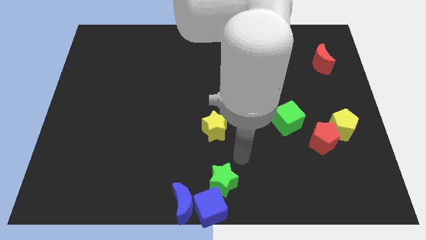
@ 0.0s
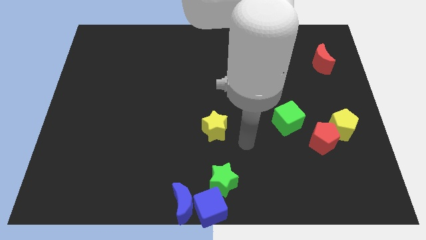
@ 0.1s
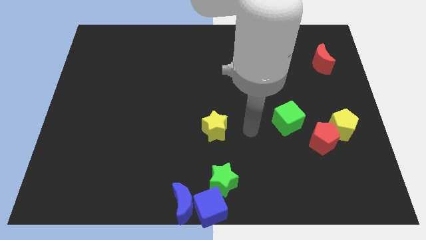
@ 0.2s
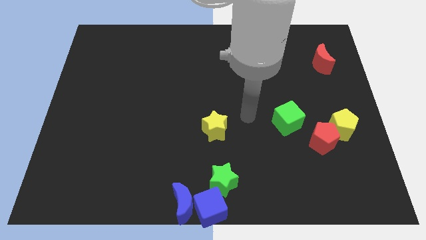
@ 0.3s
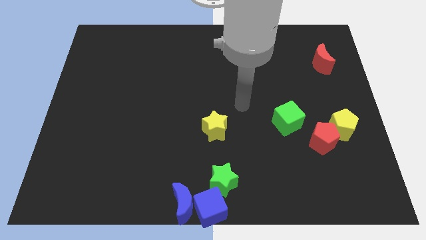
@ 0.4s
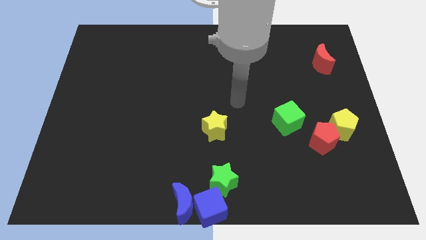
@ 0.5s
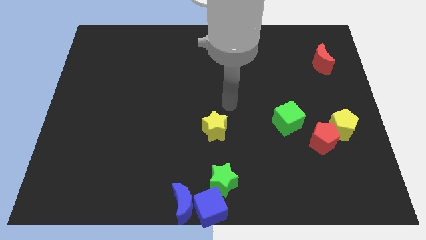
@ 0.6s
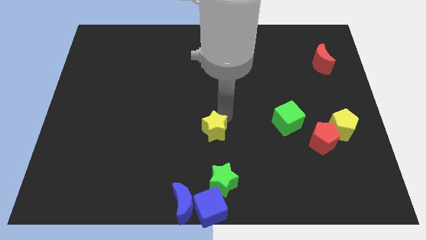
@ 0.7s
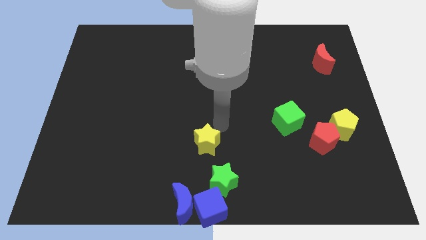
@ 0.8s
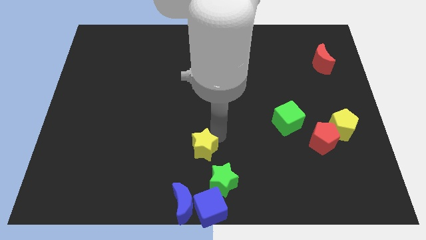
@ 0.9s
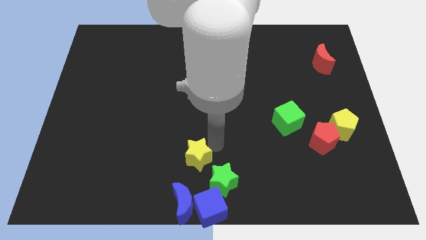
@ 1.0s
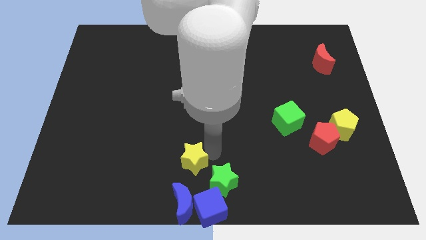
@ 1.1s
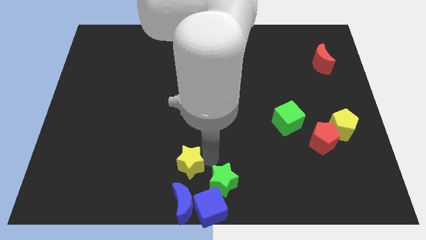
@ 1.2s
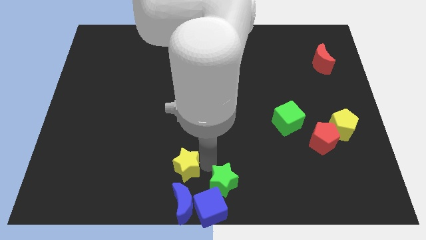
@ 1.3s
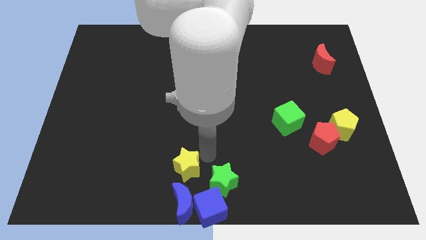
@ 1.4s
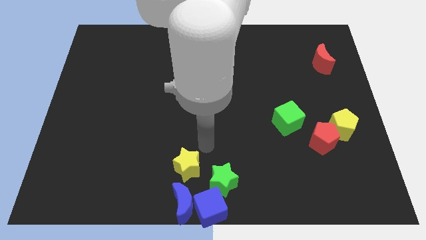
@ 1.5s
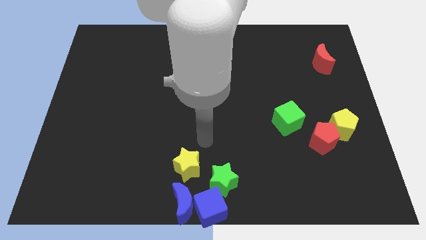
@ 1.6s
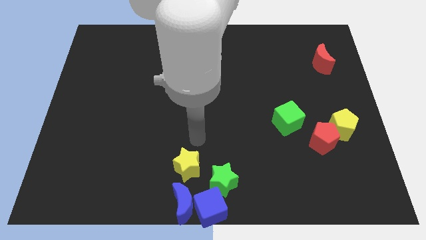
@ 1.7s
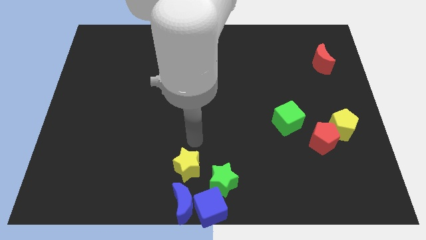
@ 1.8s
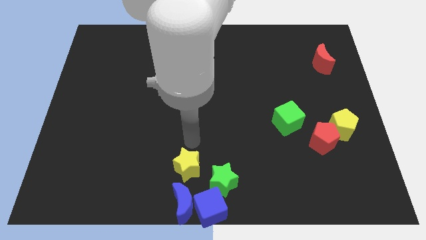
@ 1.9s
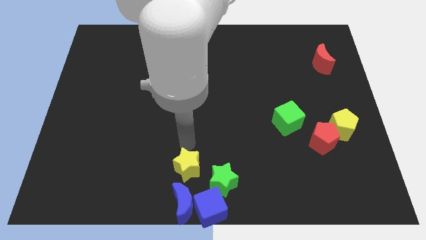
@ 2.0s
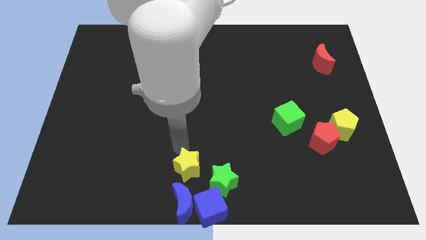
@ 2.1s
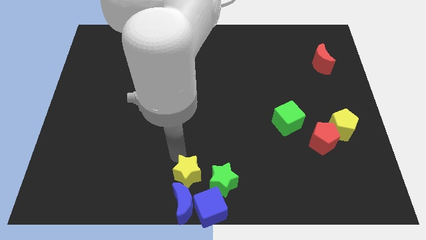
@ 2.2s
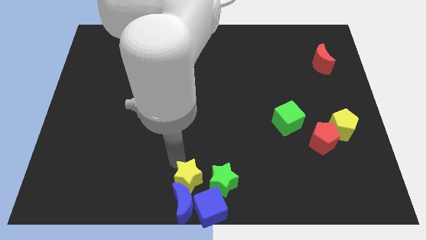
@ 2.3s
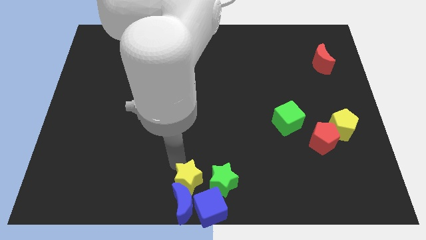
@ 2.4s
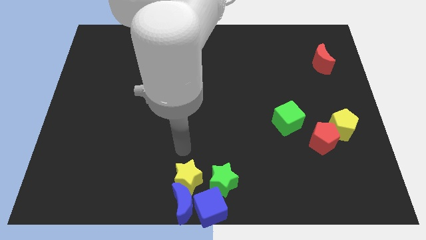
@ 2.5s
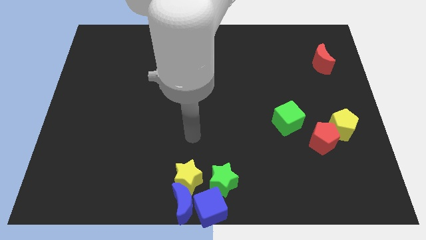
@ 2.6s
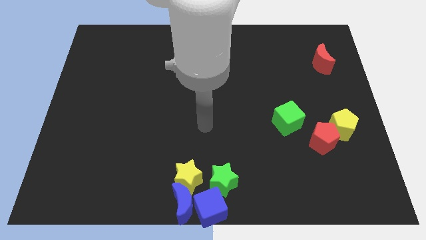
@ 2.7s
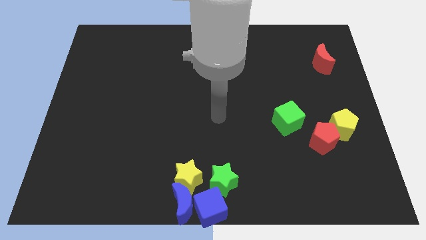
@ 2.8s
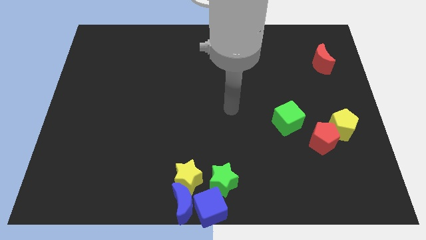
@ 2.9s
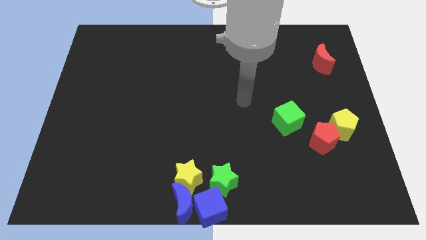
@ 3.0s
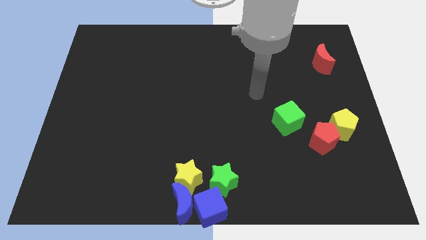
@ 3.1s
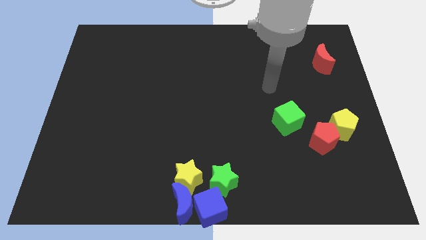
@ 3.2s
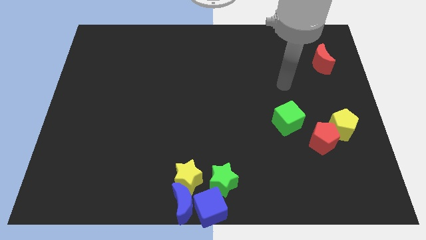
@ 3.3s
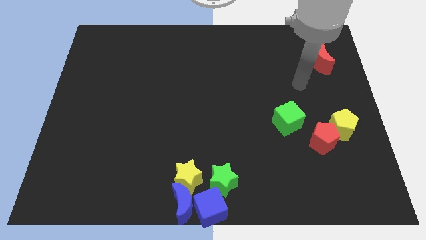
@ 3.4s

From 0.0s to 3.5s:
move the yellow star to the left of the green star

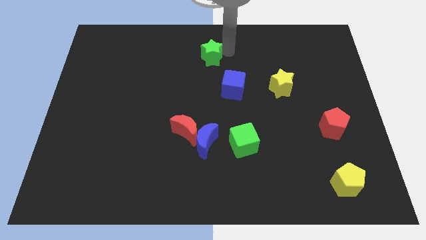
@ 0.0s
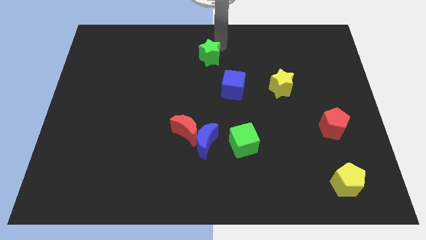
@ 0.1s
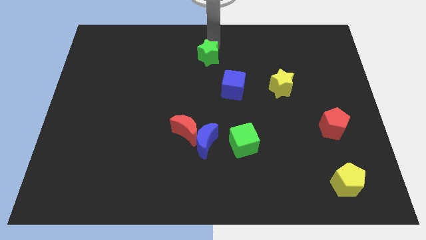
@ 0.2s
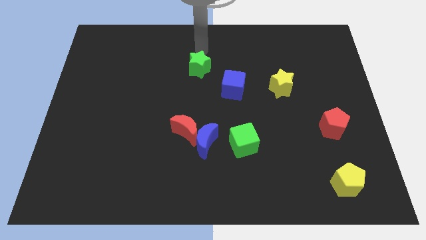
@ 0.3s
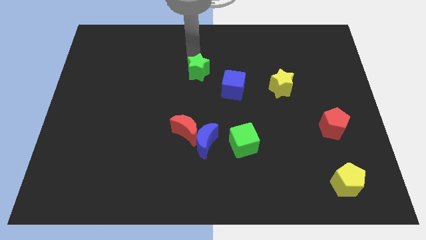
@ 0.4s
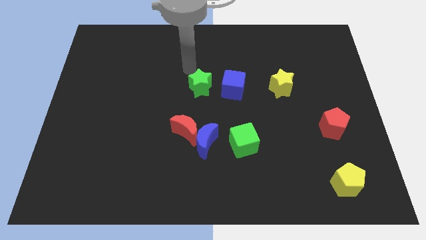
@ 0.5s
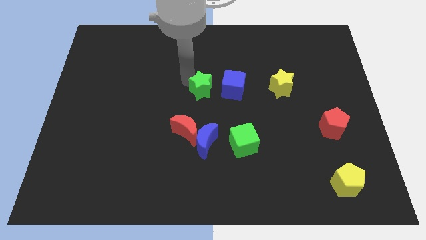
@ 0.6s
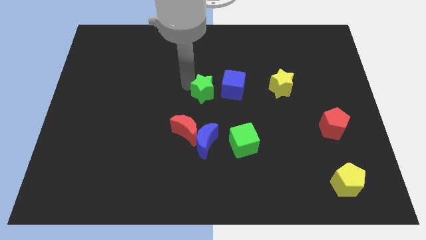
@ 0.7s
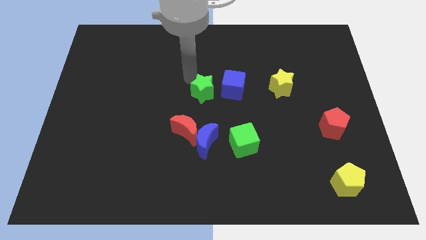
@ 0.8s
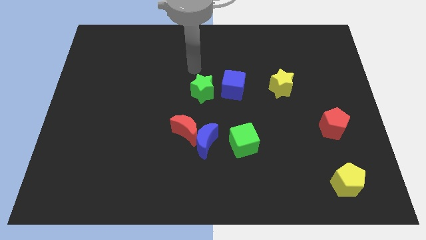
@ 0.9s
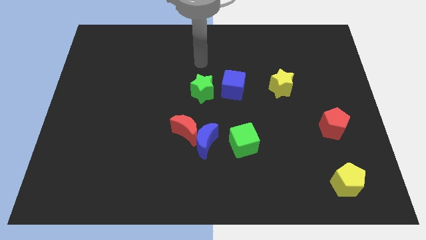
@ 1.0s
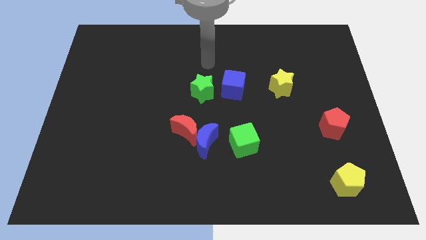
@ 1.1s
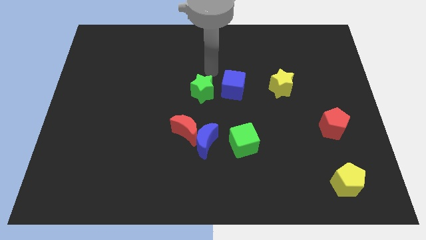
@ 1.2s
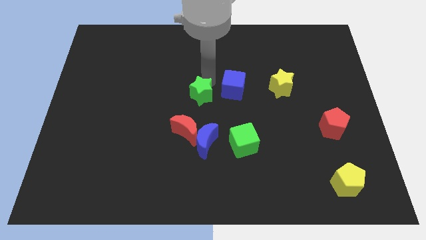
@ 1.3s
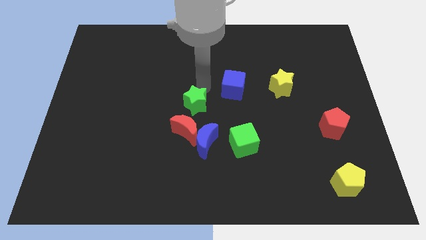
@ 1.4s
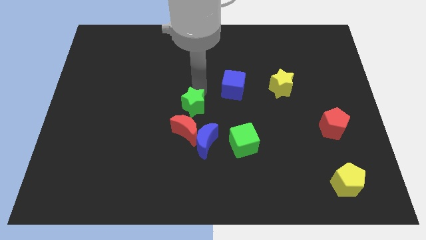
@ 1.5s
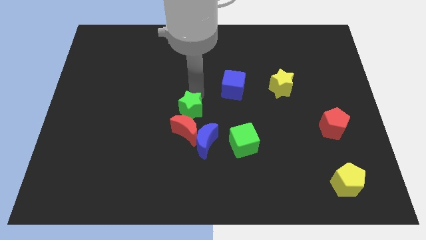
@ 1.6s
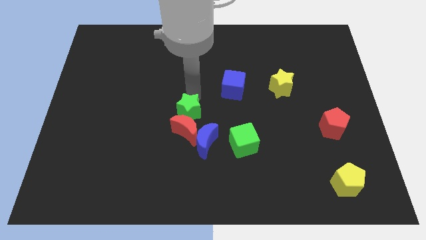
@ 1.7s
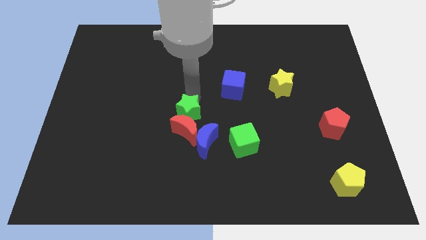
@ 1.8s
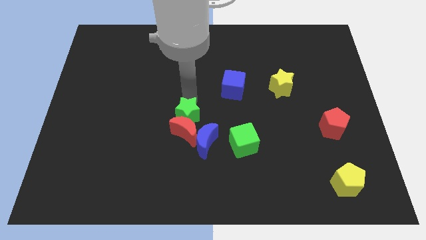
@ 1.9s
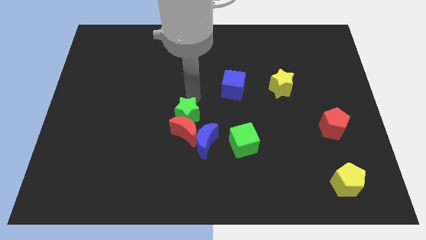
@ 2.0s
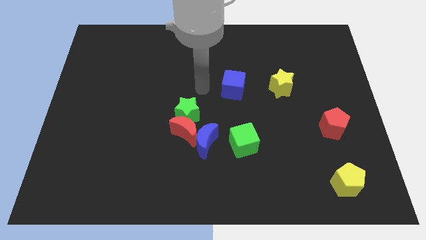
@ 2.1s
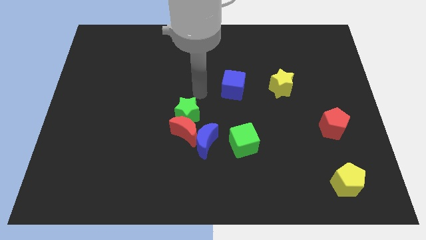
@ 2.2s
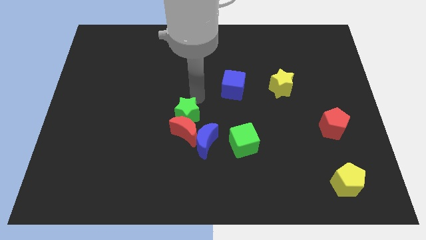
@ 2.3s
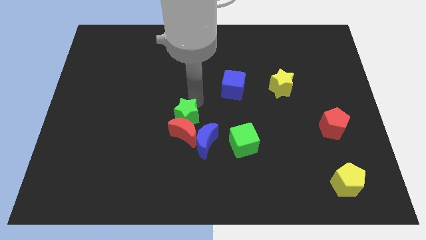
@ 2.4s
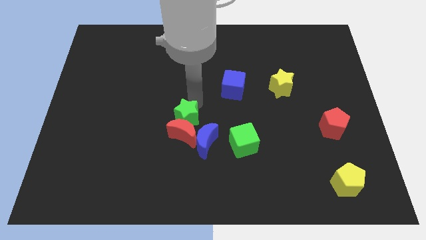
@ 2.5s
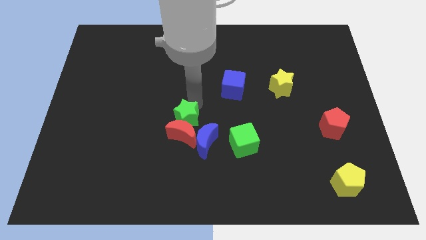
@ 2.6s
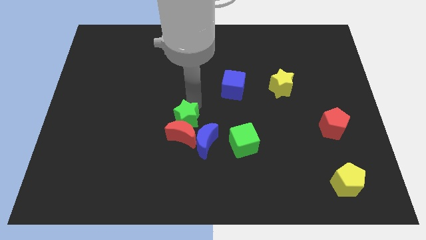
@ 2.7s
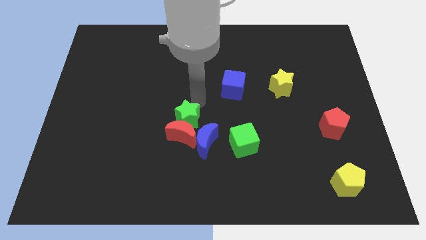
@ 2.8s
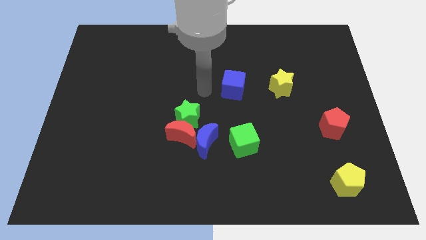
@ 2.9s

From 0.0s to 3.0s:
push the green star into the red crescent

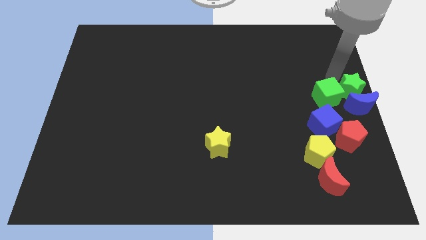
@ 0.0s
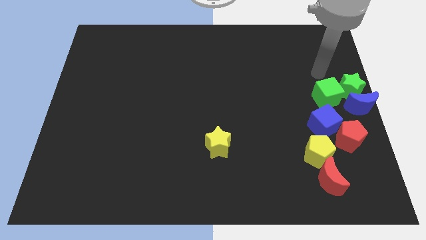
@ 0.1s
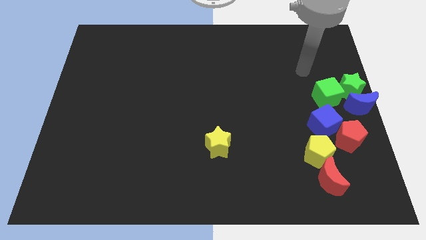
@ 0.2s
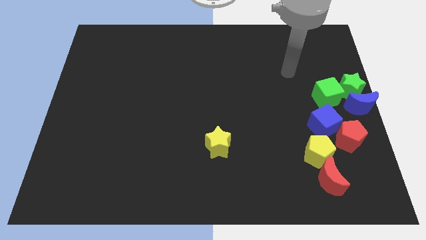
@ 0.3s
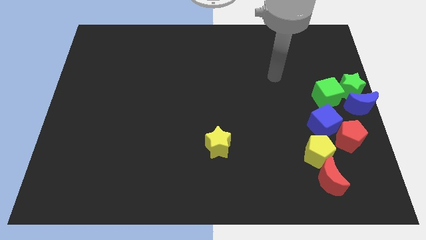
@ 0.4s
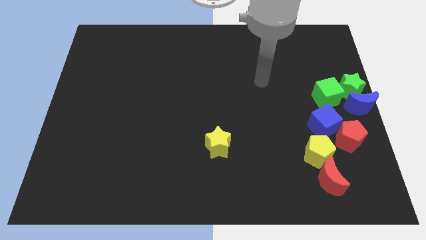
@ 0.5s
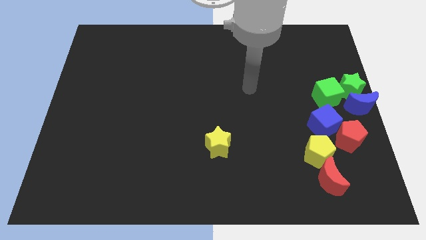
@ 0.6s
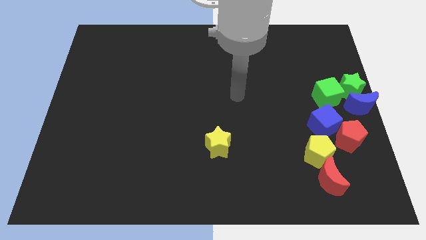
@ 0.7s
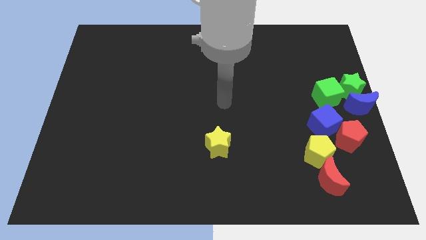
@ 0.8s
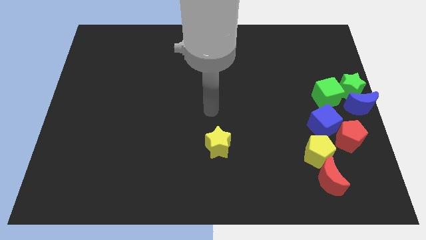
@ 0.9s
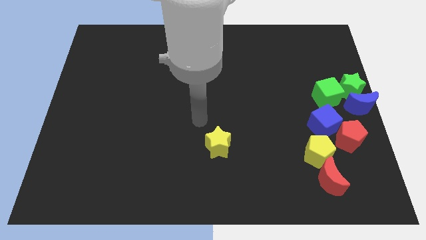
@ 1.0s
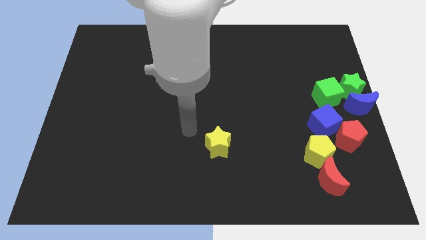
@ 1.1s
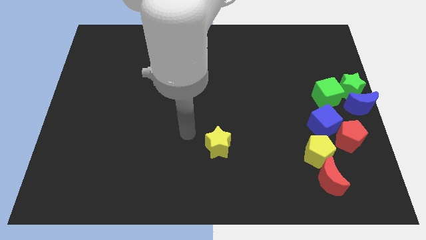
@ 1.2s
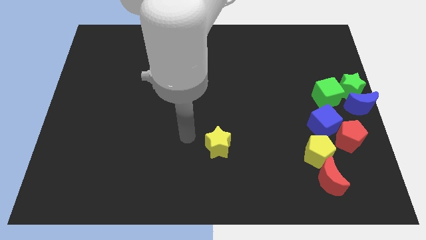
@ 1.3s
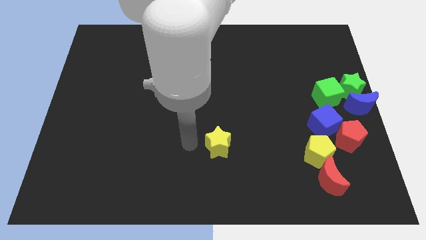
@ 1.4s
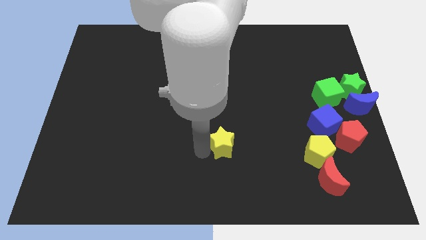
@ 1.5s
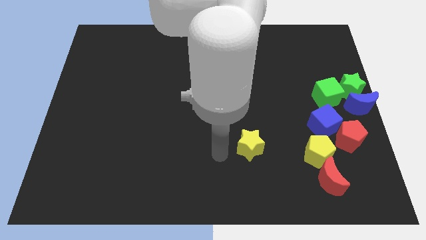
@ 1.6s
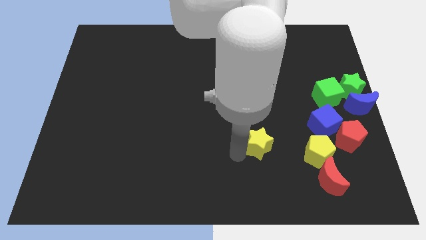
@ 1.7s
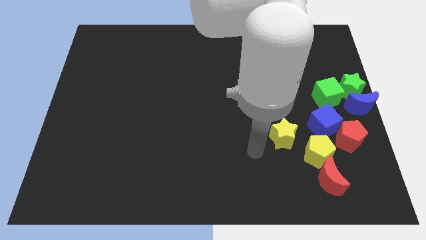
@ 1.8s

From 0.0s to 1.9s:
move the yellow star towards the yellow pentagon

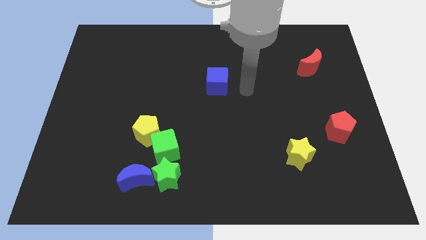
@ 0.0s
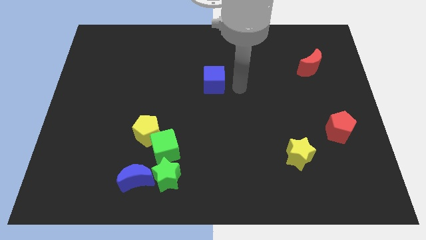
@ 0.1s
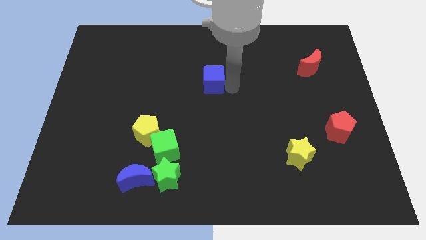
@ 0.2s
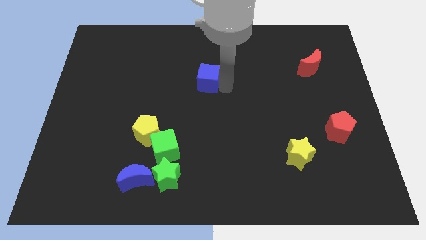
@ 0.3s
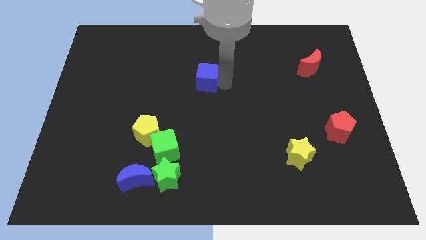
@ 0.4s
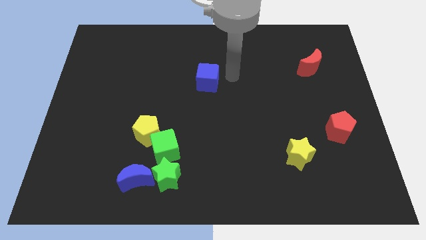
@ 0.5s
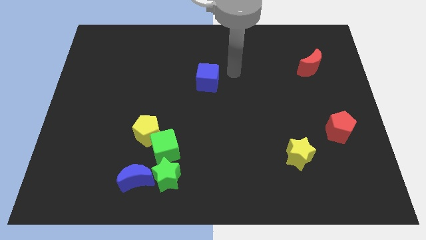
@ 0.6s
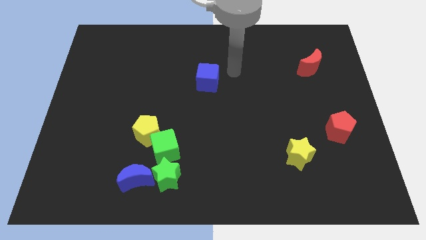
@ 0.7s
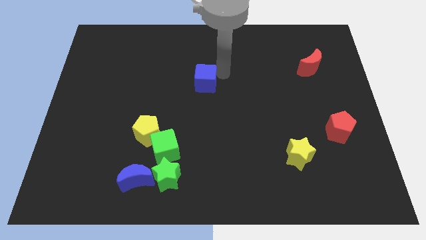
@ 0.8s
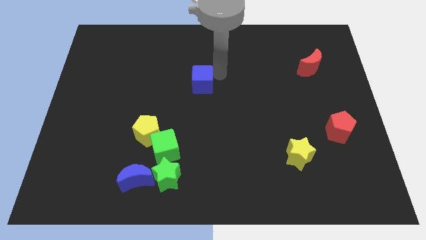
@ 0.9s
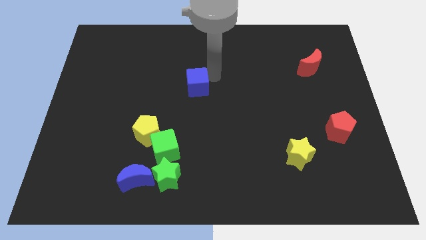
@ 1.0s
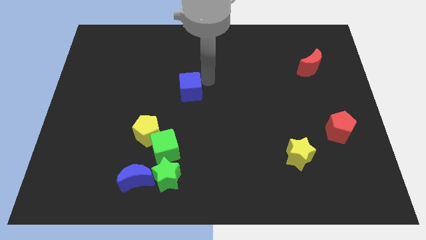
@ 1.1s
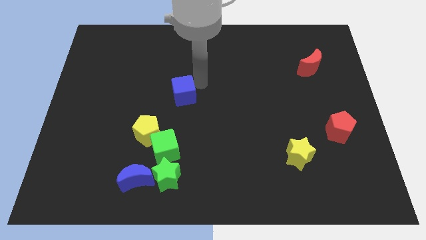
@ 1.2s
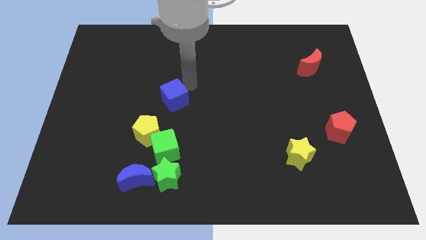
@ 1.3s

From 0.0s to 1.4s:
place the blue cube vertically above the green blocks
